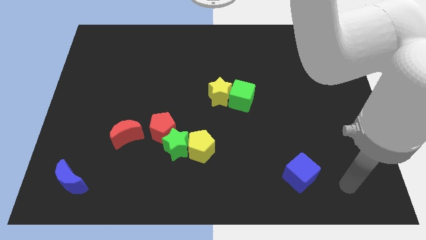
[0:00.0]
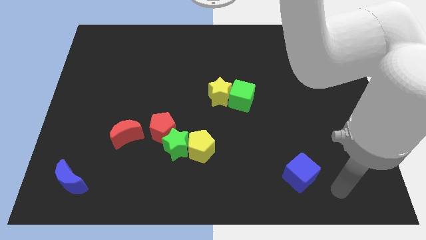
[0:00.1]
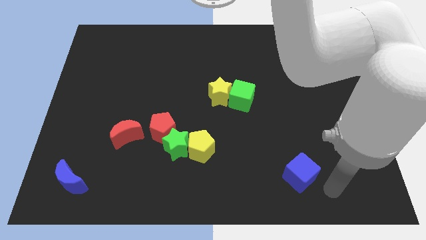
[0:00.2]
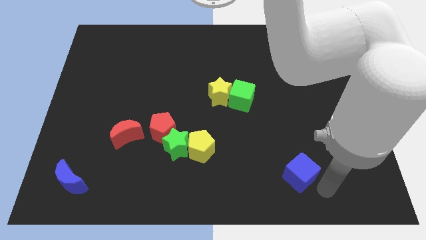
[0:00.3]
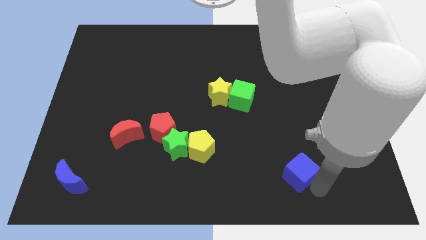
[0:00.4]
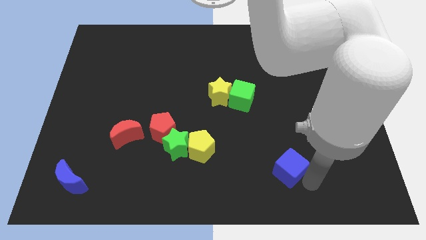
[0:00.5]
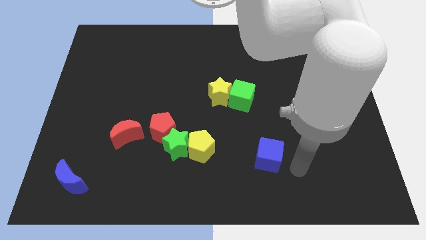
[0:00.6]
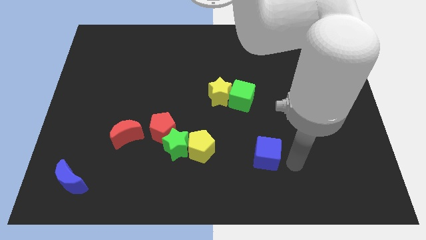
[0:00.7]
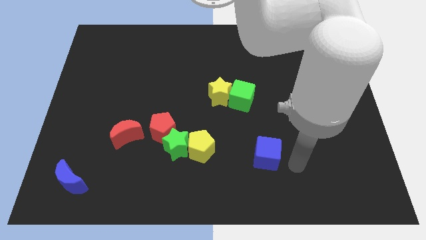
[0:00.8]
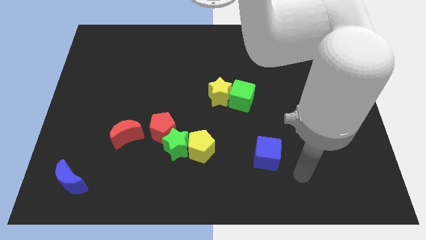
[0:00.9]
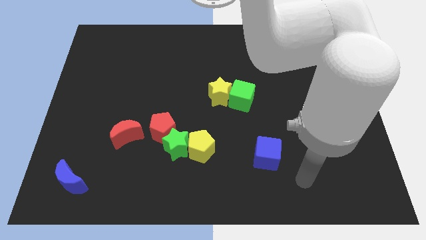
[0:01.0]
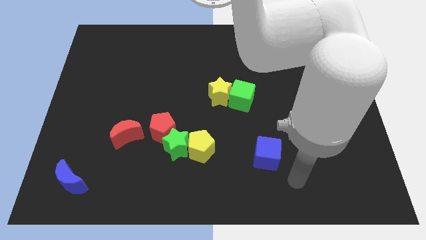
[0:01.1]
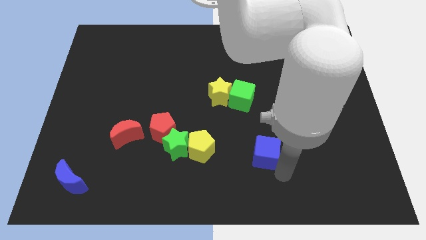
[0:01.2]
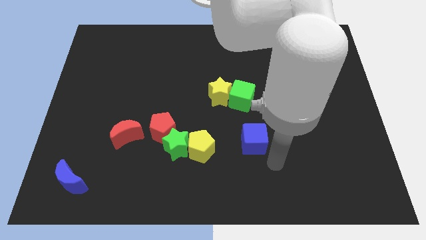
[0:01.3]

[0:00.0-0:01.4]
move the blue cube to the left of the board

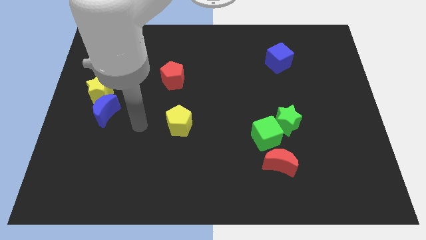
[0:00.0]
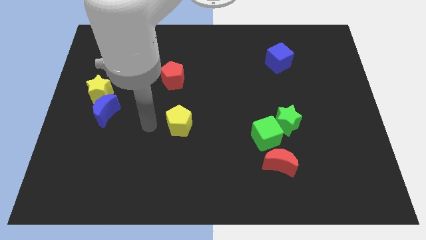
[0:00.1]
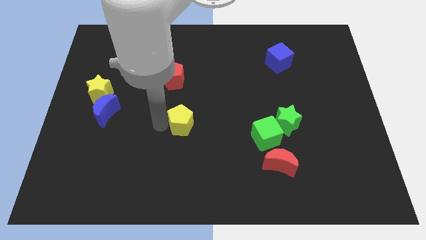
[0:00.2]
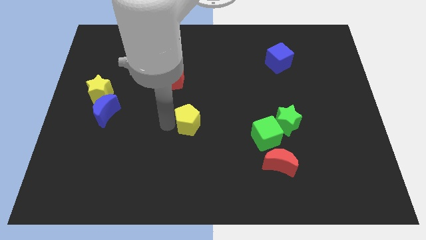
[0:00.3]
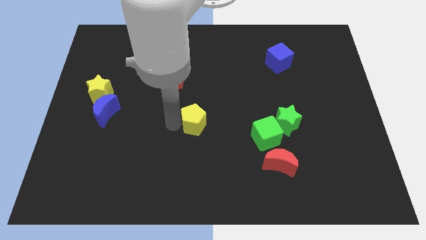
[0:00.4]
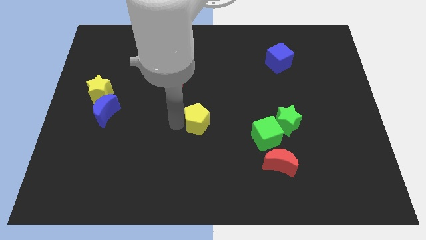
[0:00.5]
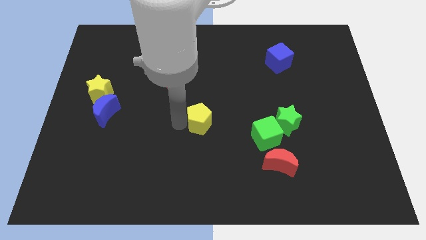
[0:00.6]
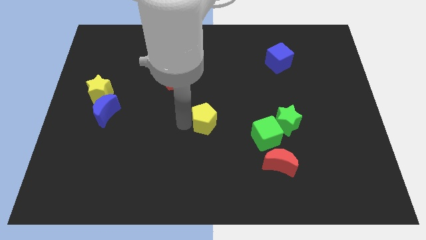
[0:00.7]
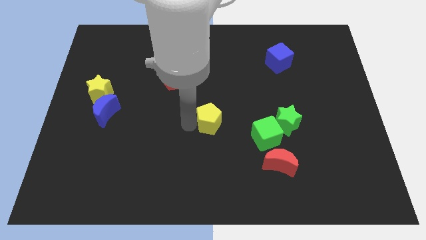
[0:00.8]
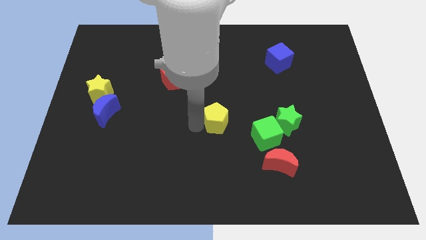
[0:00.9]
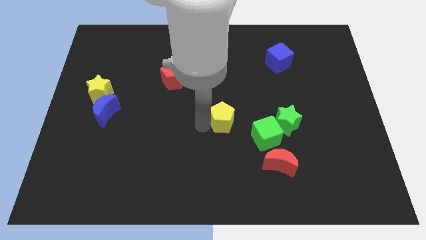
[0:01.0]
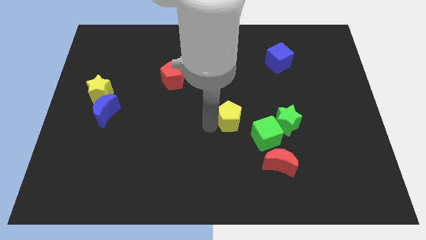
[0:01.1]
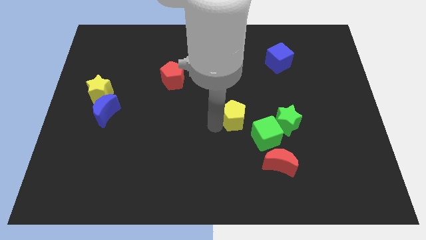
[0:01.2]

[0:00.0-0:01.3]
move the yellow pentagon to the right of the board

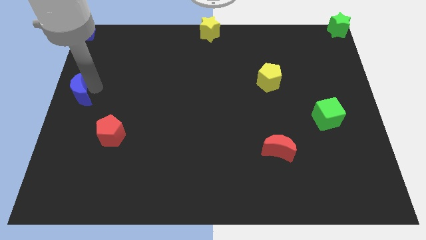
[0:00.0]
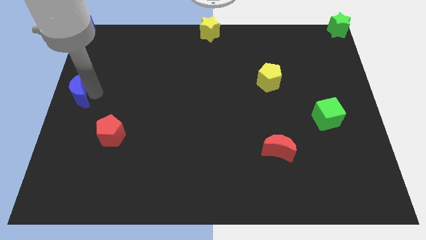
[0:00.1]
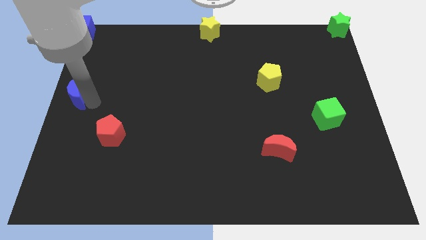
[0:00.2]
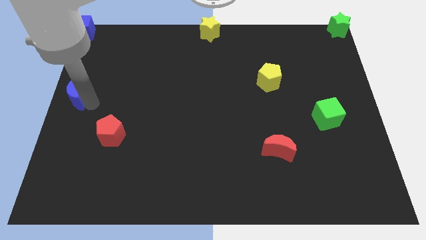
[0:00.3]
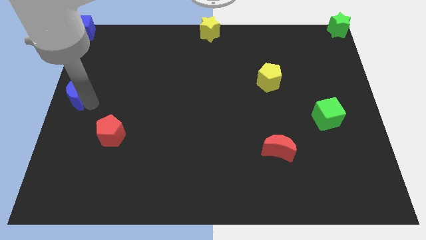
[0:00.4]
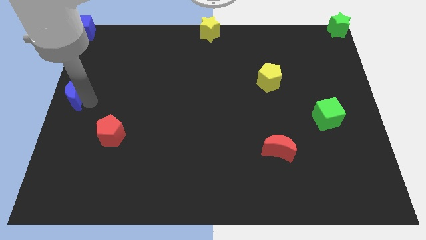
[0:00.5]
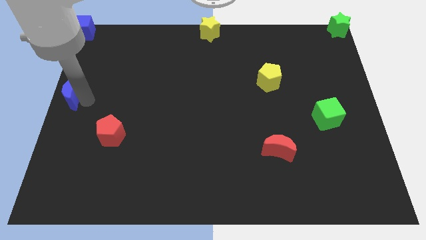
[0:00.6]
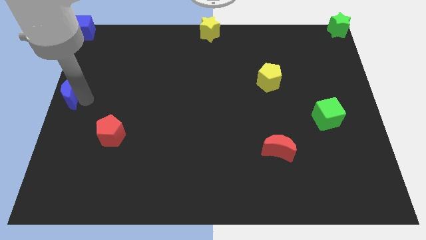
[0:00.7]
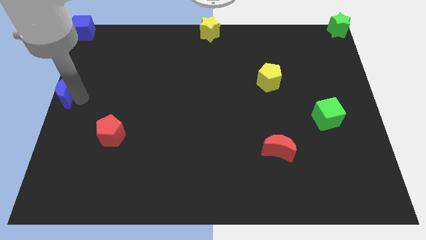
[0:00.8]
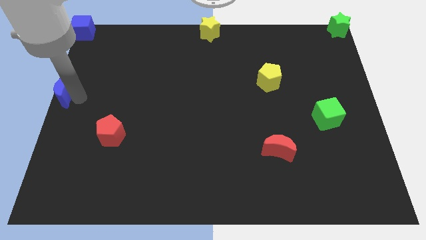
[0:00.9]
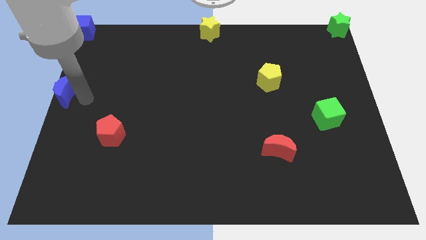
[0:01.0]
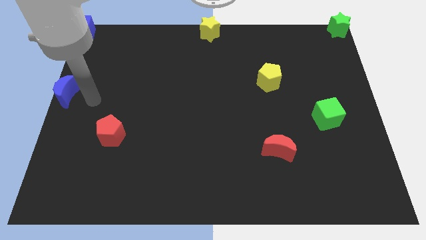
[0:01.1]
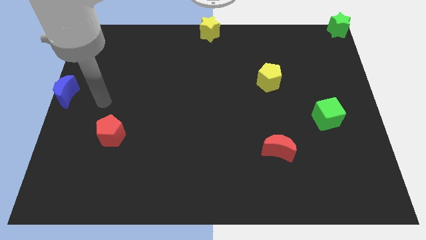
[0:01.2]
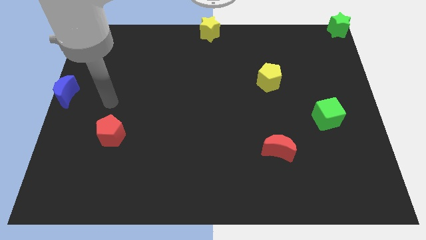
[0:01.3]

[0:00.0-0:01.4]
push the blue moon to the left center

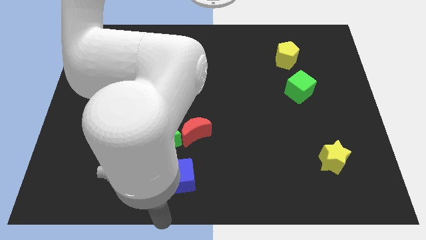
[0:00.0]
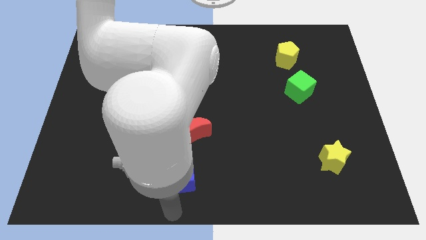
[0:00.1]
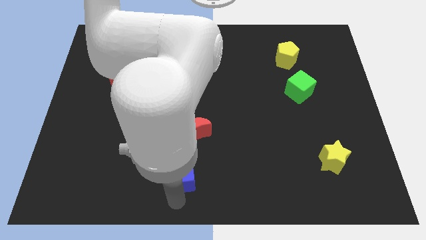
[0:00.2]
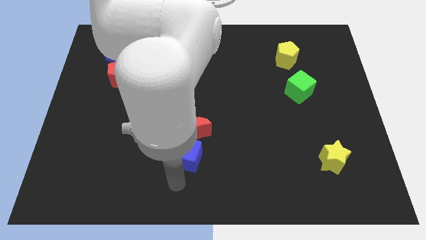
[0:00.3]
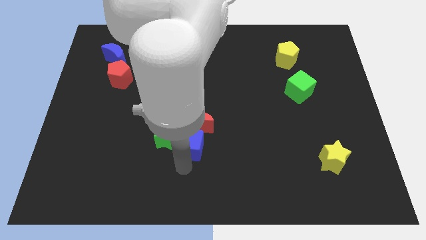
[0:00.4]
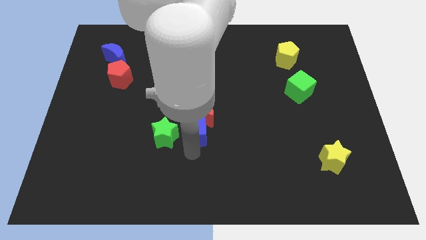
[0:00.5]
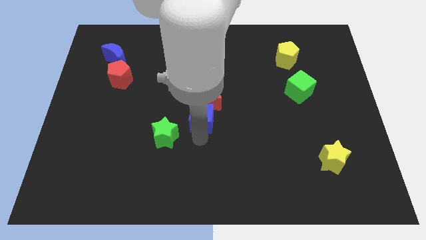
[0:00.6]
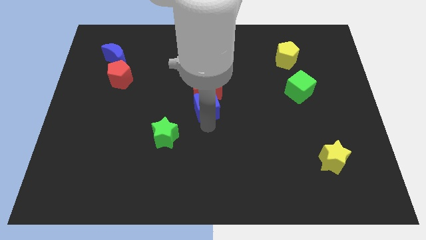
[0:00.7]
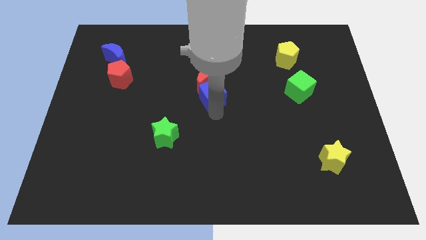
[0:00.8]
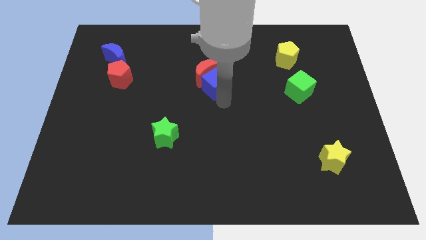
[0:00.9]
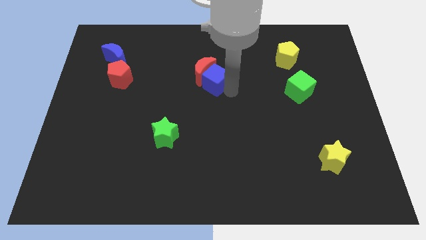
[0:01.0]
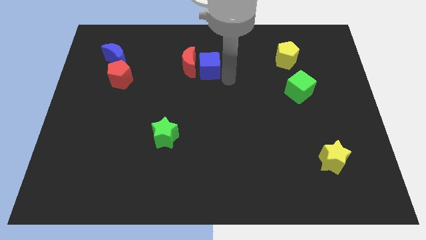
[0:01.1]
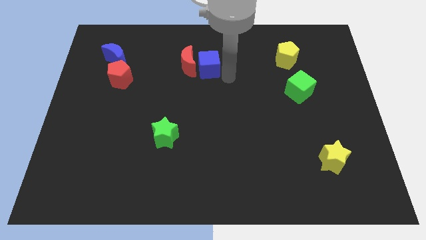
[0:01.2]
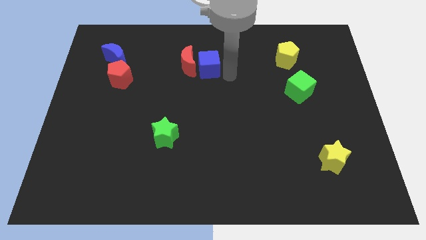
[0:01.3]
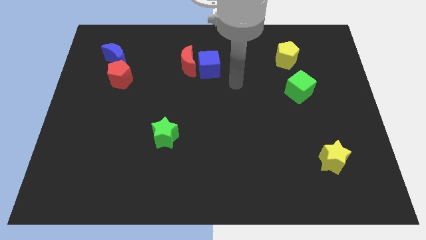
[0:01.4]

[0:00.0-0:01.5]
push the red moon to the top side of the board with the blue cube

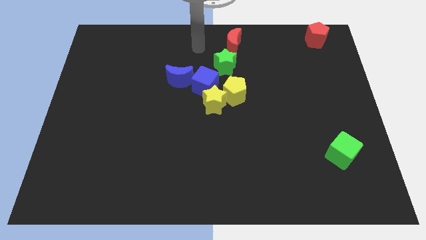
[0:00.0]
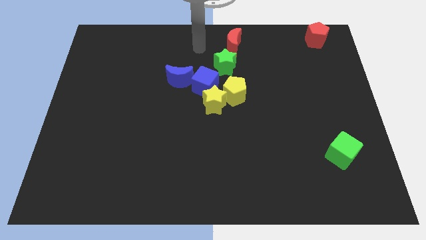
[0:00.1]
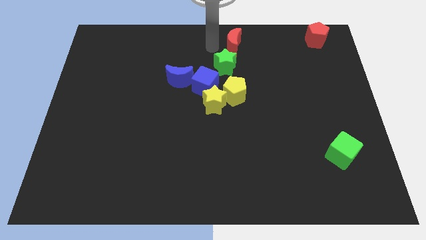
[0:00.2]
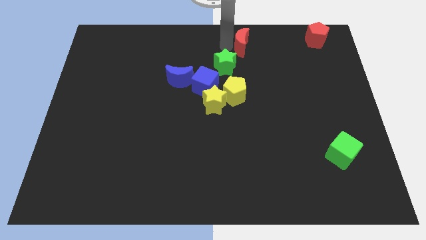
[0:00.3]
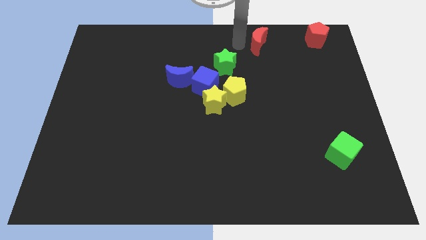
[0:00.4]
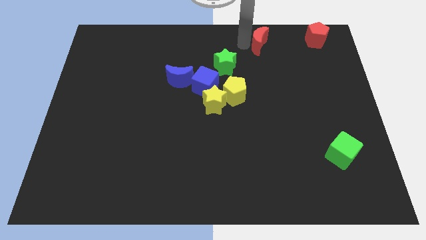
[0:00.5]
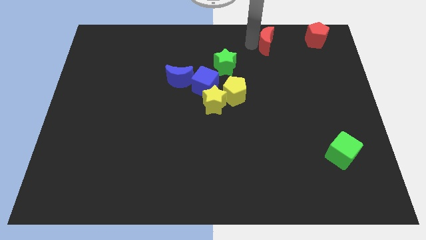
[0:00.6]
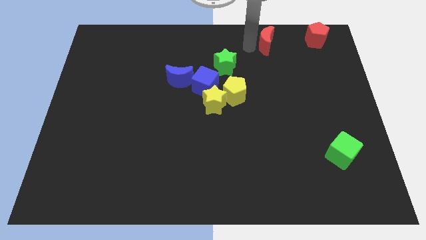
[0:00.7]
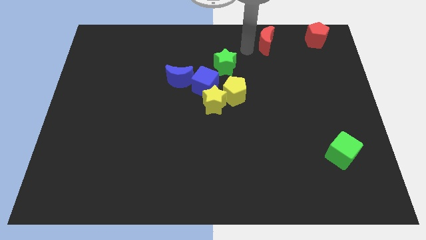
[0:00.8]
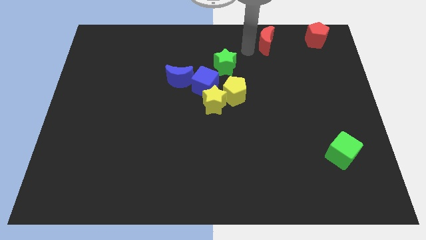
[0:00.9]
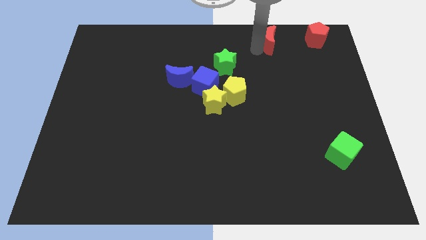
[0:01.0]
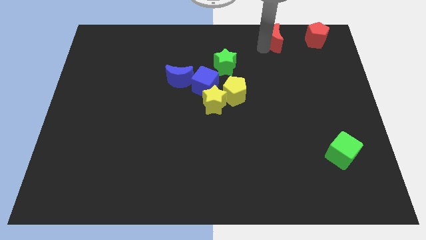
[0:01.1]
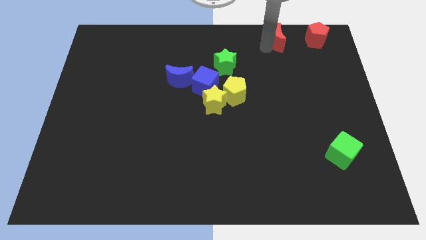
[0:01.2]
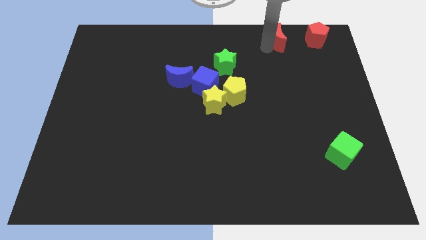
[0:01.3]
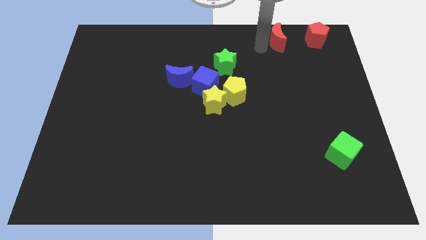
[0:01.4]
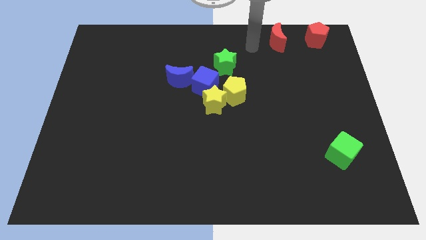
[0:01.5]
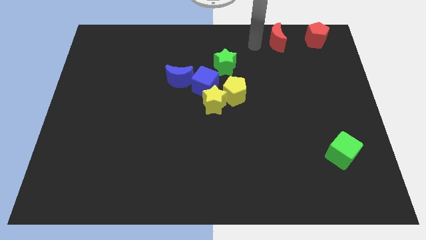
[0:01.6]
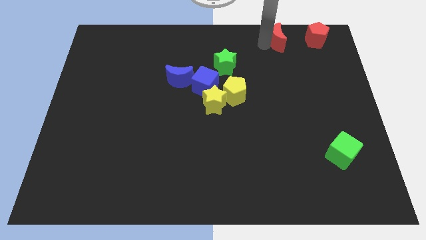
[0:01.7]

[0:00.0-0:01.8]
place the red moon left to the red pentagon

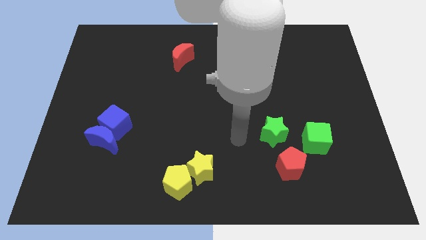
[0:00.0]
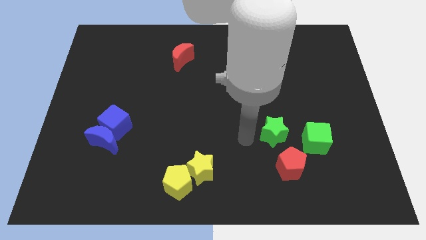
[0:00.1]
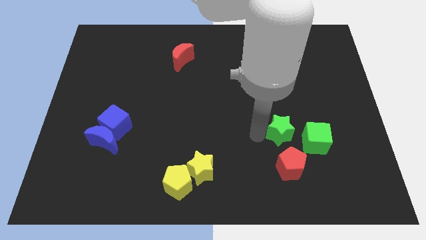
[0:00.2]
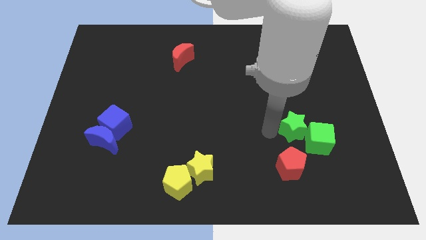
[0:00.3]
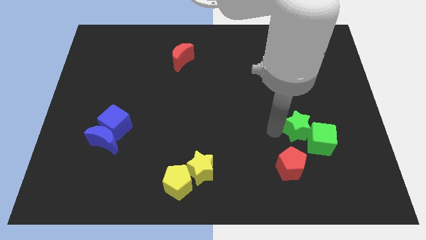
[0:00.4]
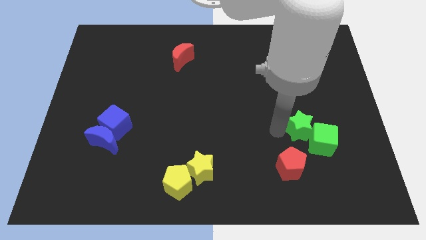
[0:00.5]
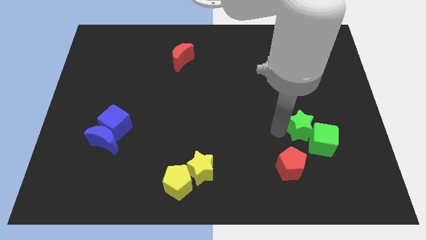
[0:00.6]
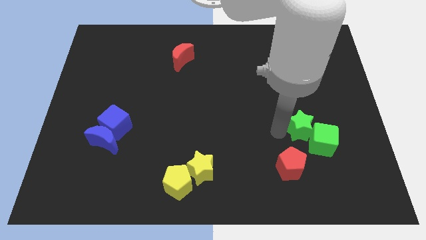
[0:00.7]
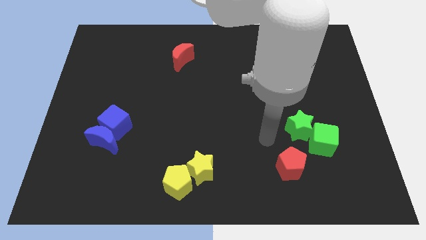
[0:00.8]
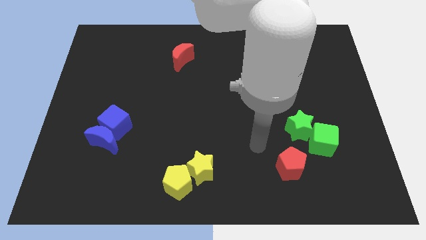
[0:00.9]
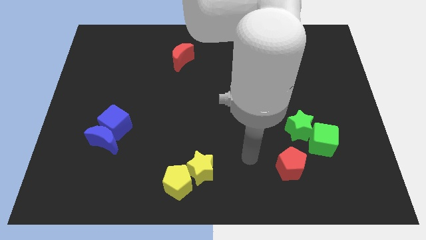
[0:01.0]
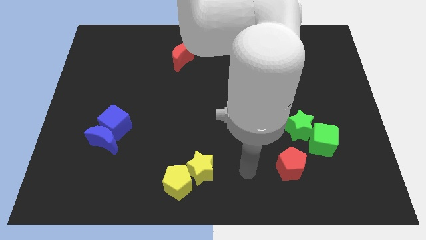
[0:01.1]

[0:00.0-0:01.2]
push the green star into the green cube

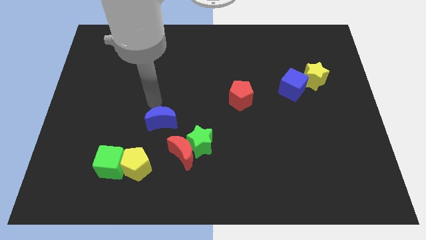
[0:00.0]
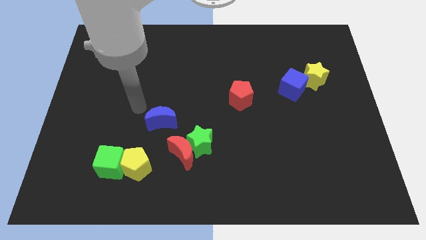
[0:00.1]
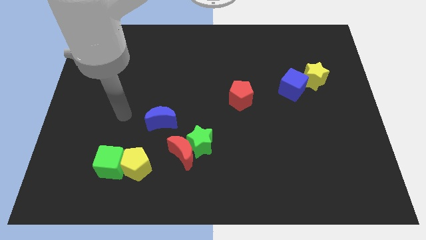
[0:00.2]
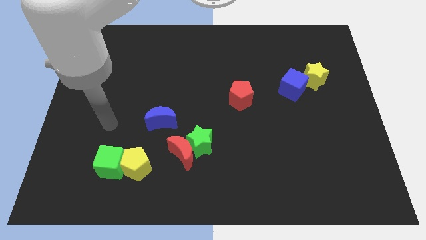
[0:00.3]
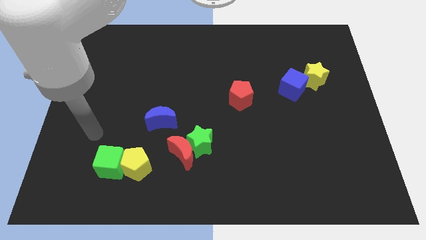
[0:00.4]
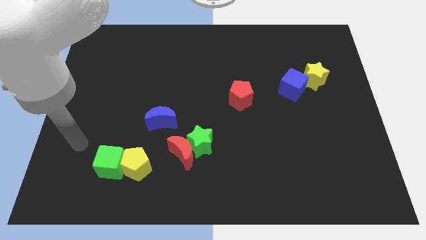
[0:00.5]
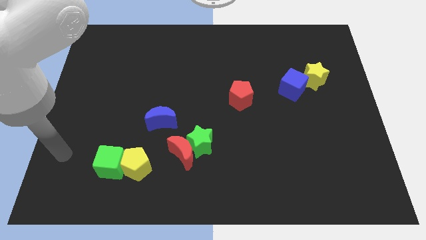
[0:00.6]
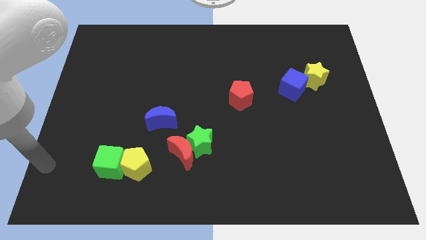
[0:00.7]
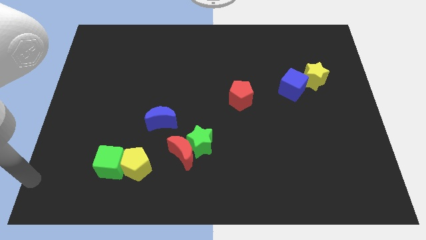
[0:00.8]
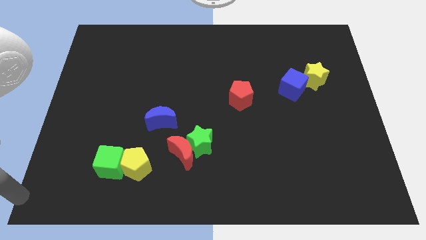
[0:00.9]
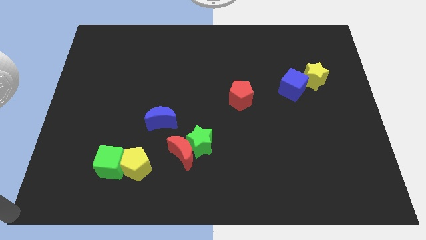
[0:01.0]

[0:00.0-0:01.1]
place your arm at the bottom left corner of the board
